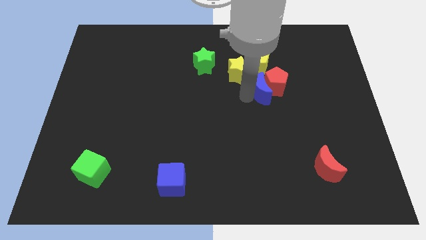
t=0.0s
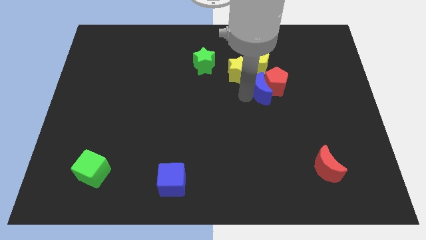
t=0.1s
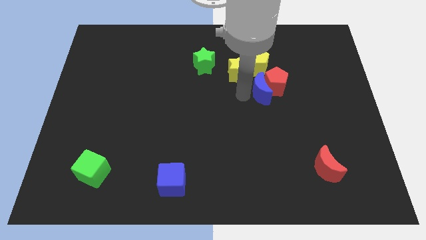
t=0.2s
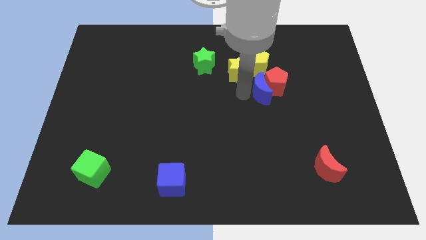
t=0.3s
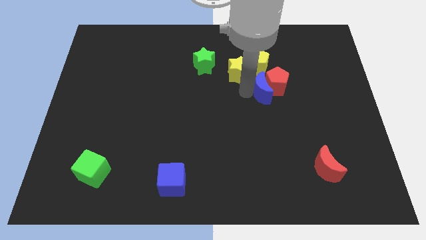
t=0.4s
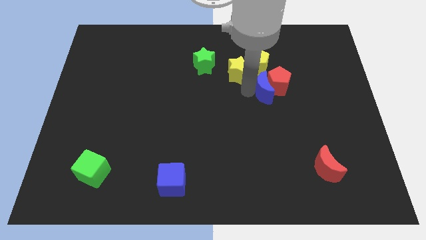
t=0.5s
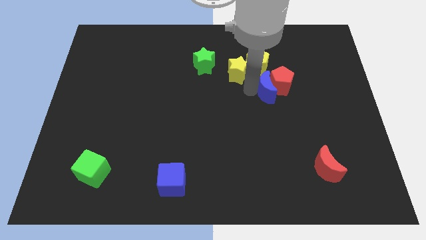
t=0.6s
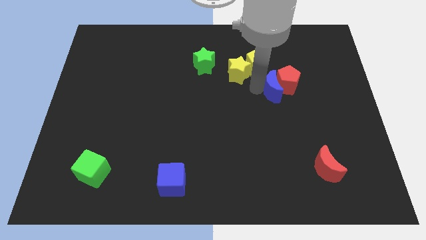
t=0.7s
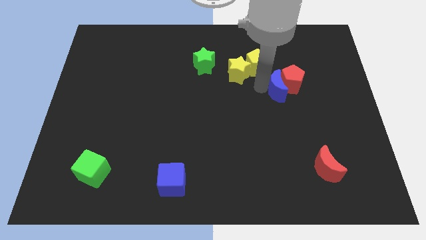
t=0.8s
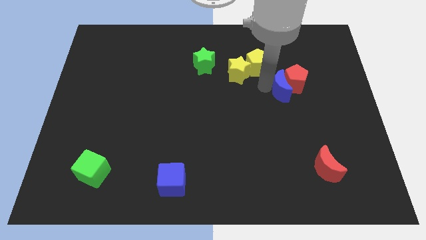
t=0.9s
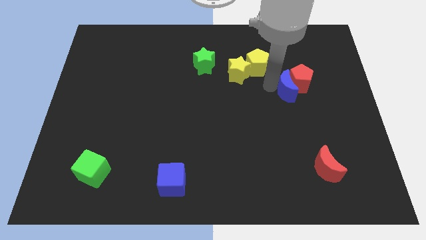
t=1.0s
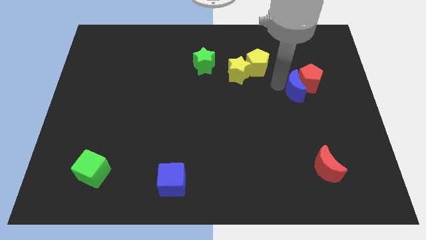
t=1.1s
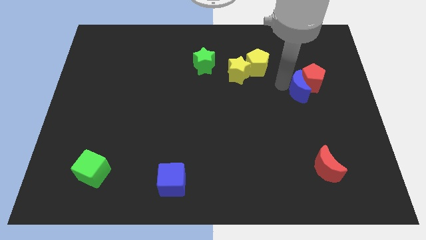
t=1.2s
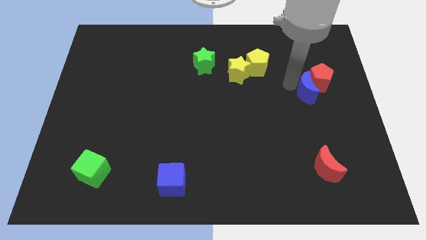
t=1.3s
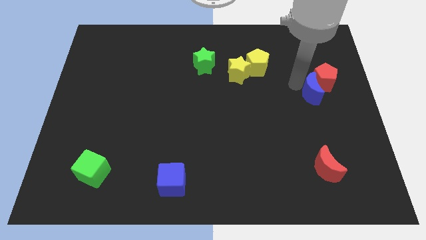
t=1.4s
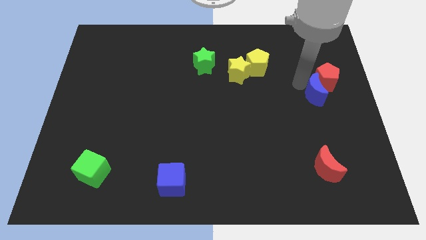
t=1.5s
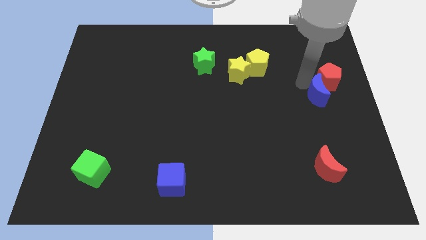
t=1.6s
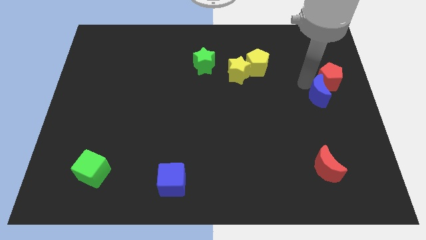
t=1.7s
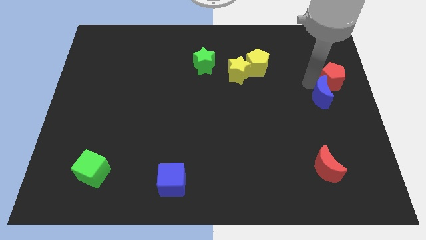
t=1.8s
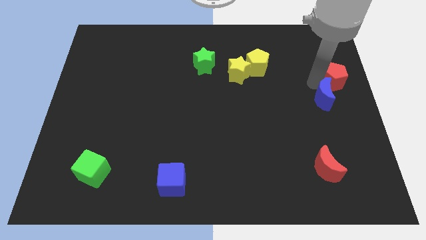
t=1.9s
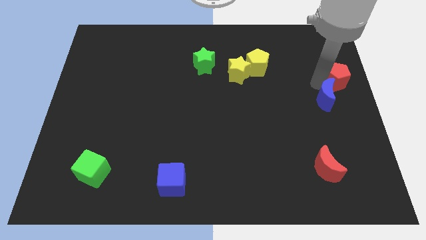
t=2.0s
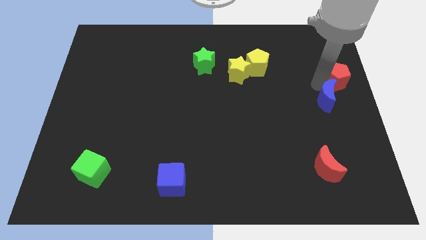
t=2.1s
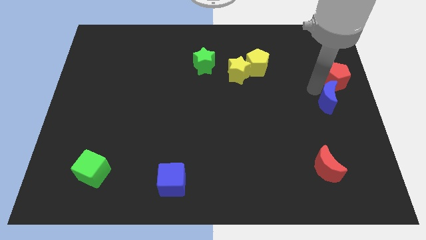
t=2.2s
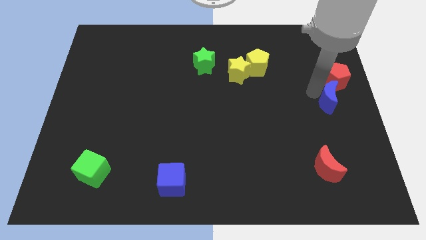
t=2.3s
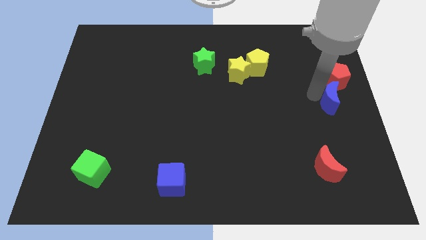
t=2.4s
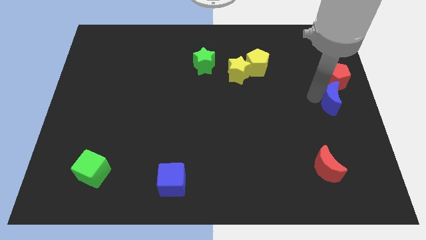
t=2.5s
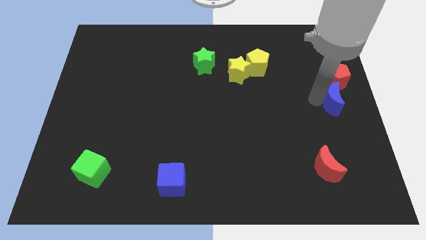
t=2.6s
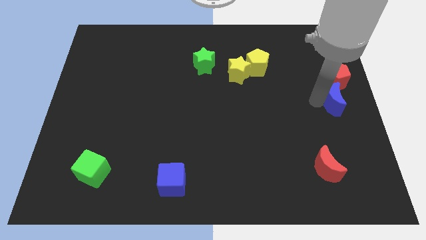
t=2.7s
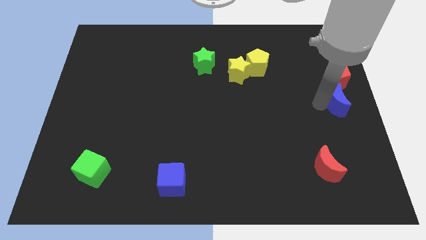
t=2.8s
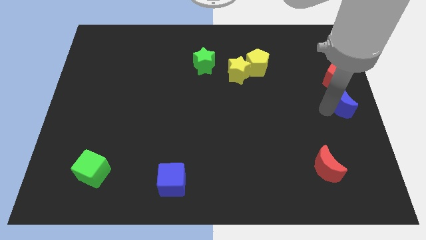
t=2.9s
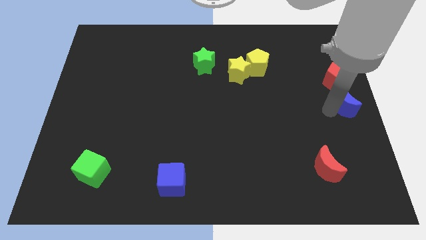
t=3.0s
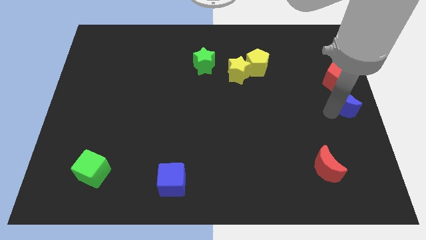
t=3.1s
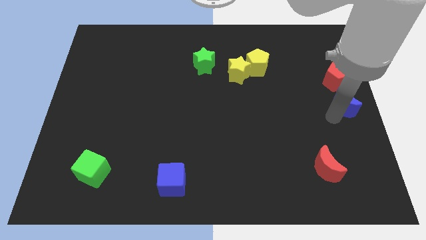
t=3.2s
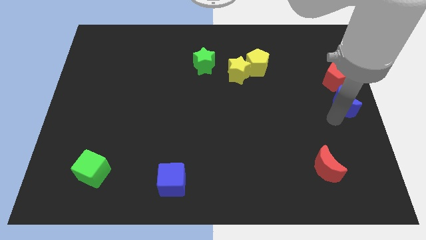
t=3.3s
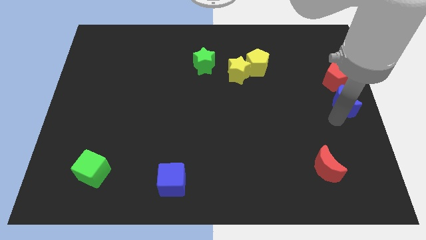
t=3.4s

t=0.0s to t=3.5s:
place the red pentagon and blue moon towards the right center of the board

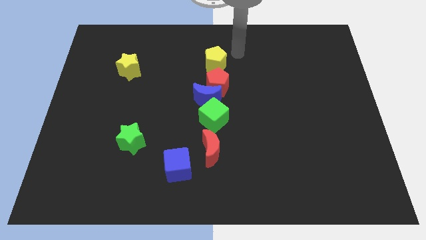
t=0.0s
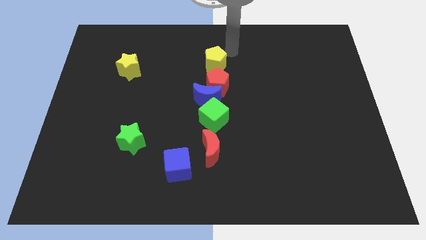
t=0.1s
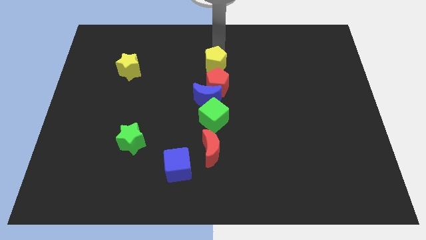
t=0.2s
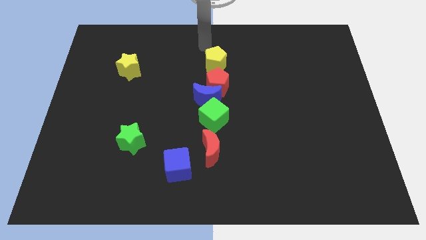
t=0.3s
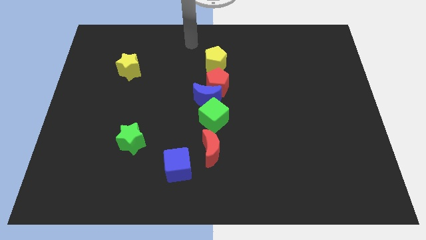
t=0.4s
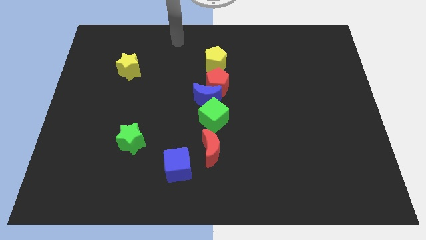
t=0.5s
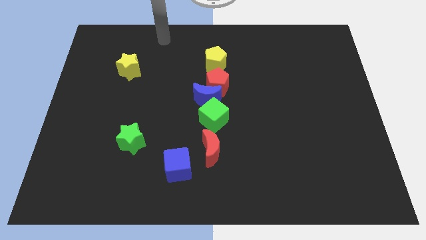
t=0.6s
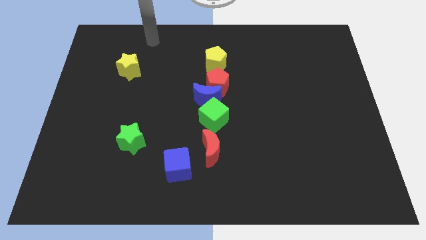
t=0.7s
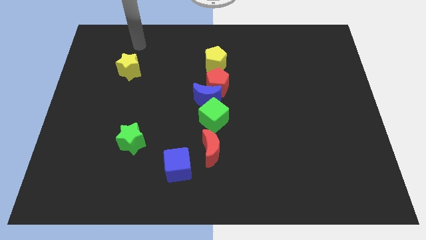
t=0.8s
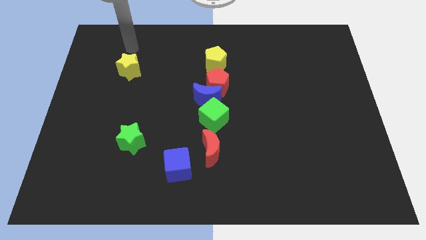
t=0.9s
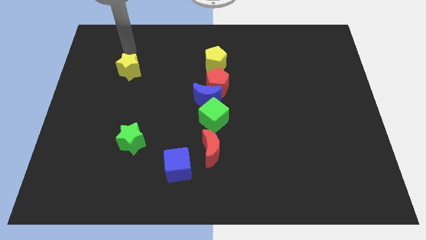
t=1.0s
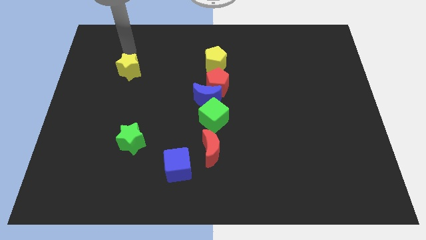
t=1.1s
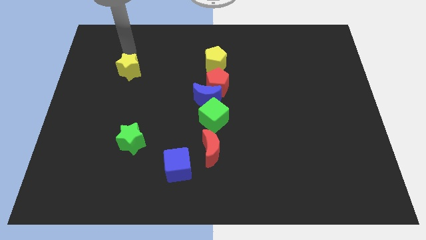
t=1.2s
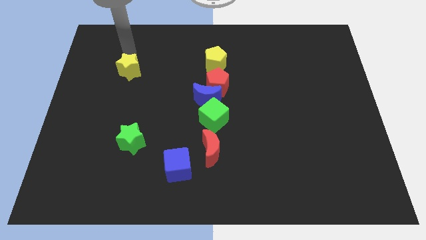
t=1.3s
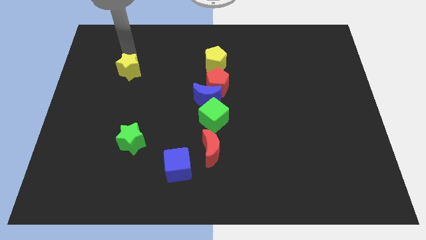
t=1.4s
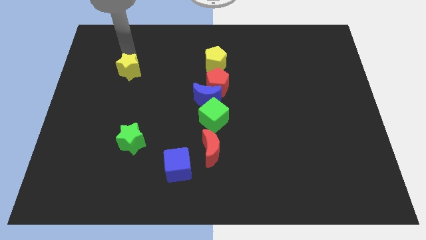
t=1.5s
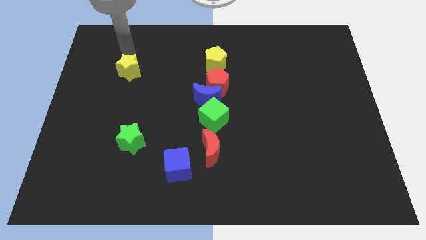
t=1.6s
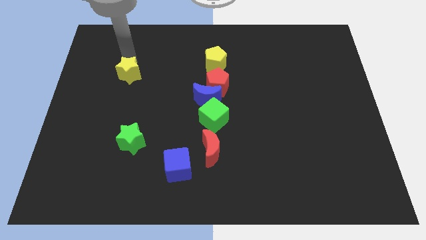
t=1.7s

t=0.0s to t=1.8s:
tap the top side of the yellow star

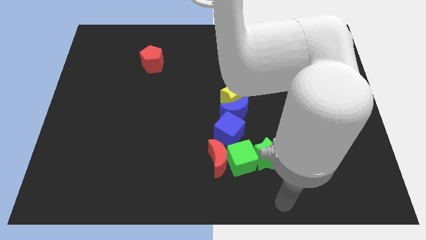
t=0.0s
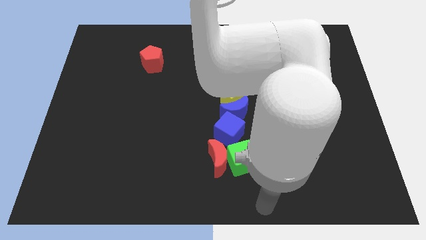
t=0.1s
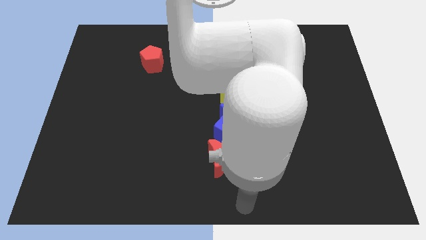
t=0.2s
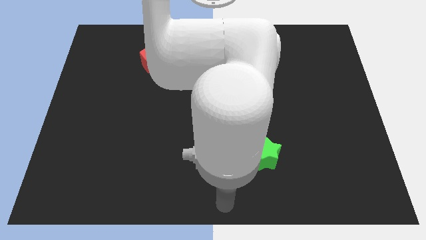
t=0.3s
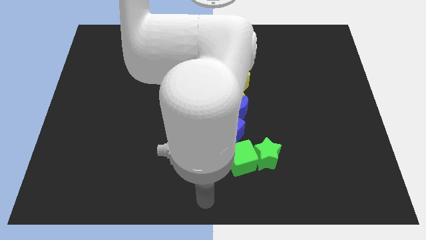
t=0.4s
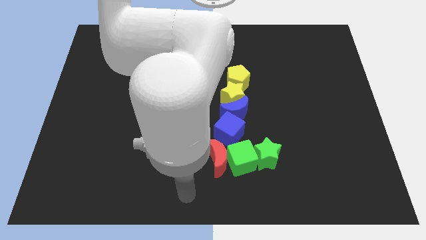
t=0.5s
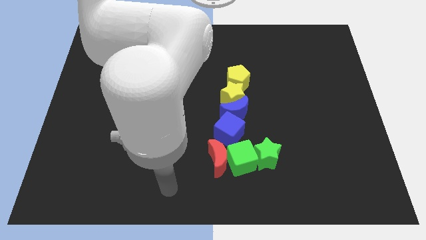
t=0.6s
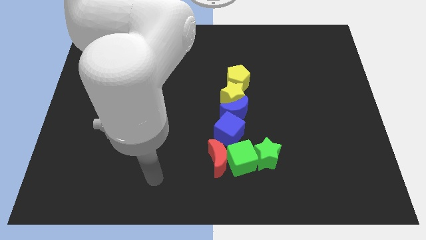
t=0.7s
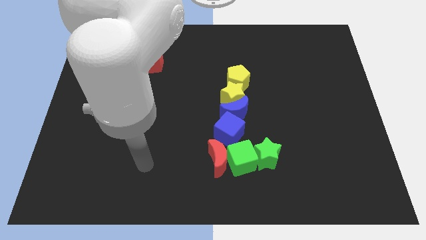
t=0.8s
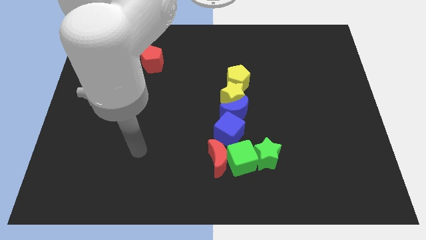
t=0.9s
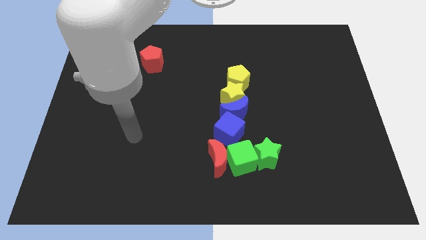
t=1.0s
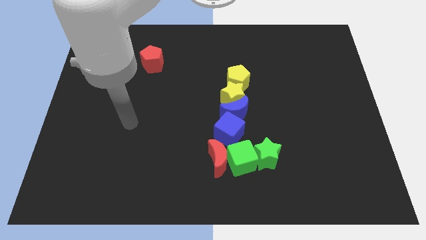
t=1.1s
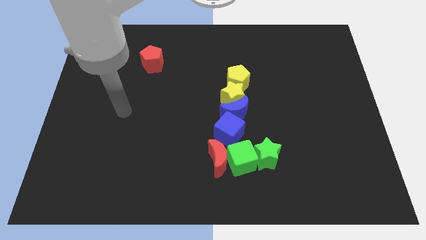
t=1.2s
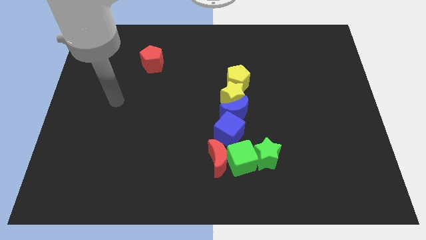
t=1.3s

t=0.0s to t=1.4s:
move arm away from green star

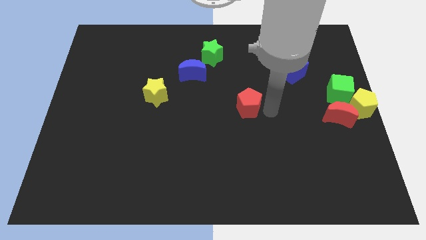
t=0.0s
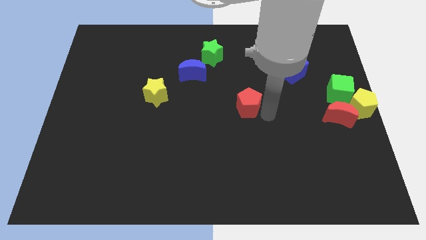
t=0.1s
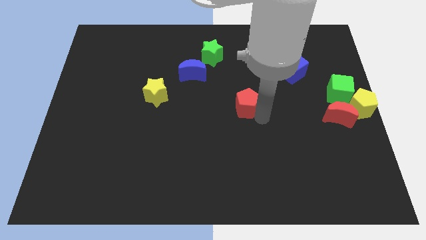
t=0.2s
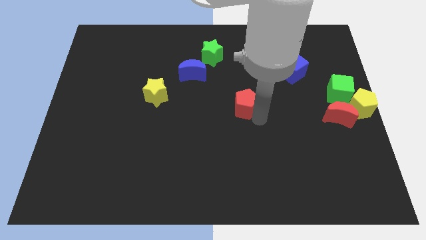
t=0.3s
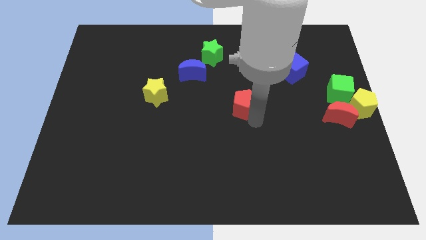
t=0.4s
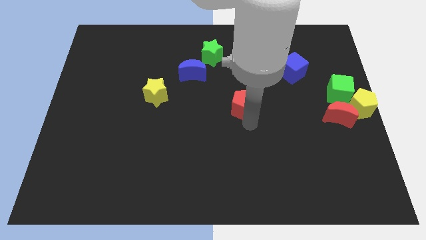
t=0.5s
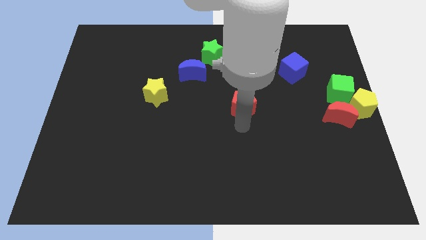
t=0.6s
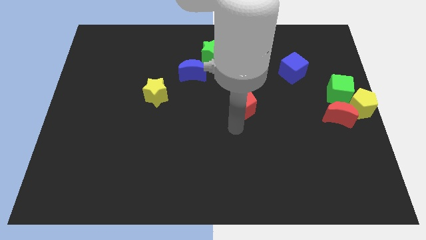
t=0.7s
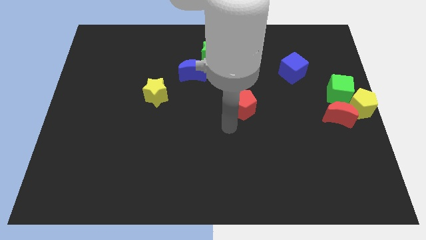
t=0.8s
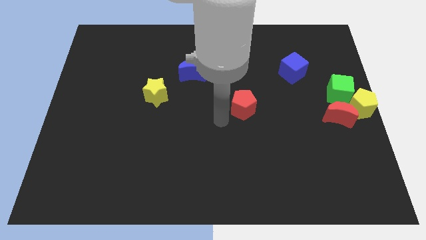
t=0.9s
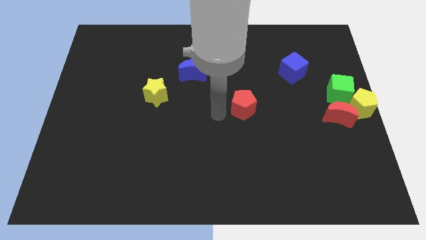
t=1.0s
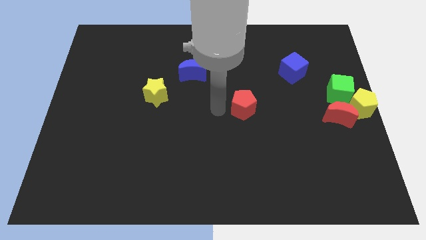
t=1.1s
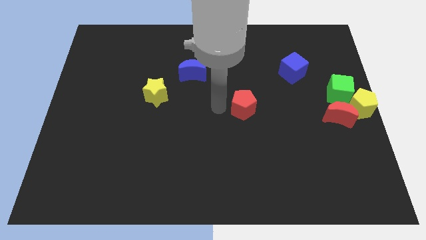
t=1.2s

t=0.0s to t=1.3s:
push the red pentagon towards the center of the board

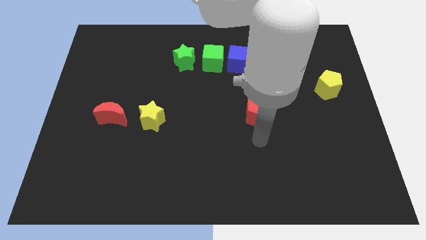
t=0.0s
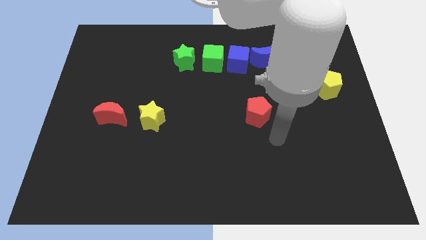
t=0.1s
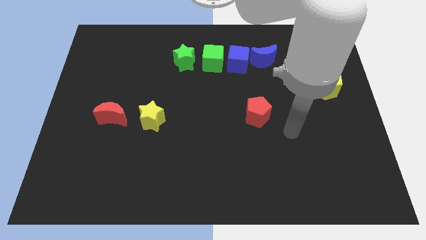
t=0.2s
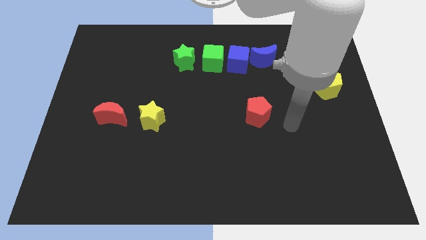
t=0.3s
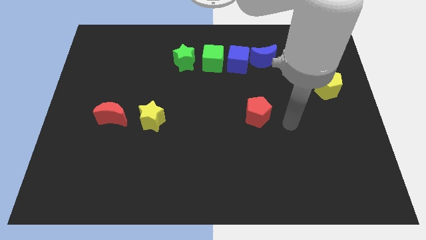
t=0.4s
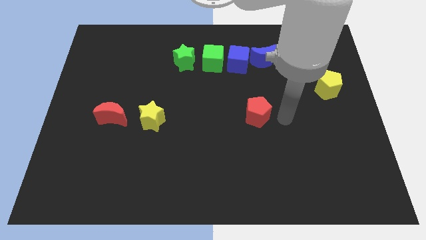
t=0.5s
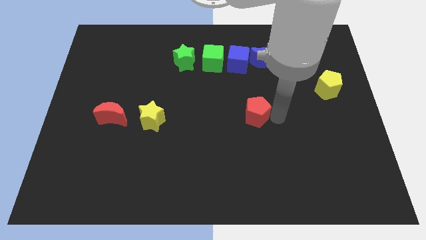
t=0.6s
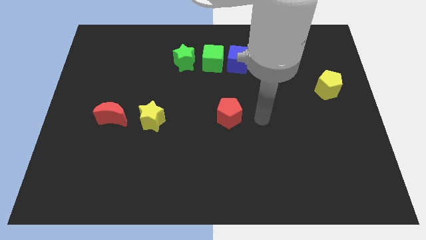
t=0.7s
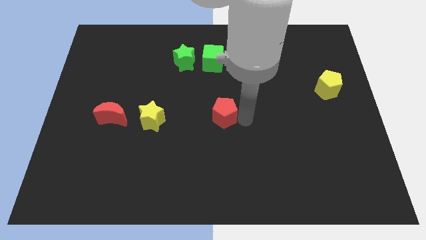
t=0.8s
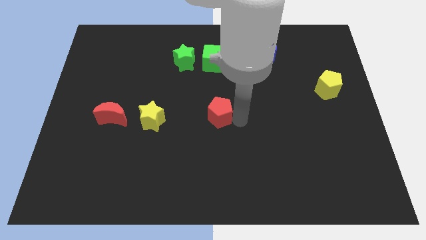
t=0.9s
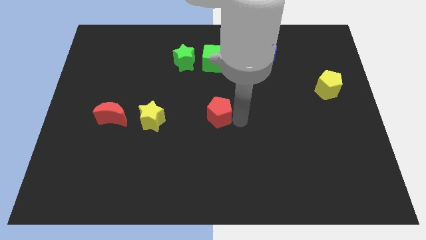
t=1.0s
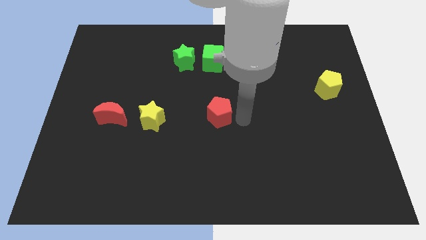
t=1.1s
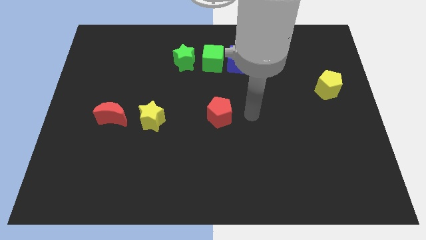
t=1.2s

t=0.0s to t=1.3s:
push the red pentagon to the left
